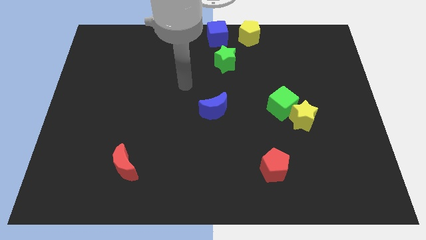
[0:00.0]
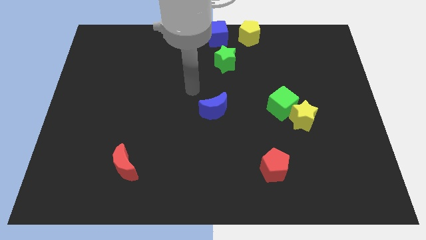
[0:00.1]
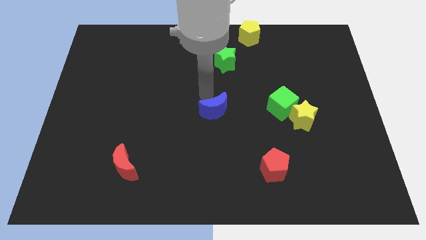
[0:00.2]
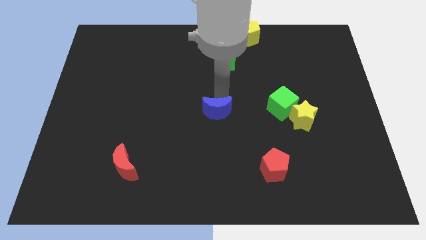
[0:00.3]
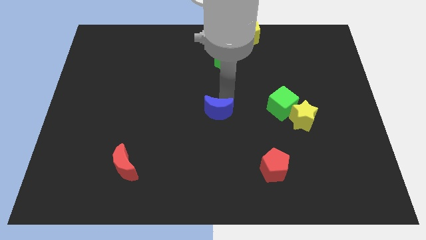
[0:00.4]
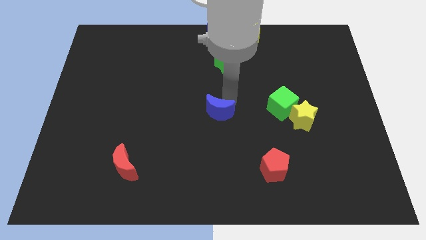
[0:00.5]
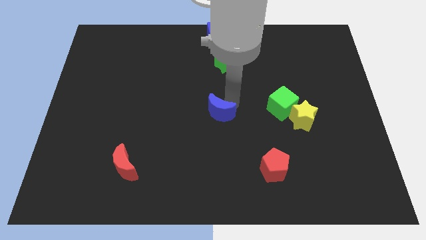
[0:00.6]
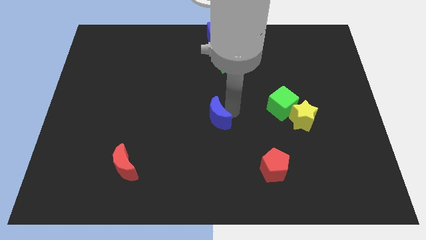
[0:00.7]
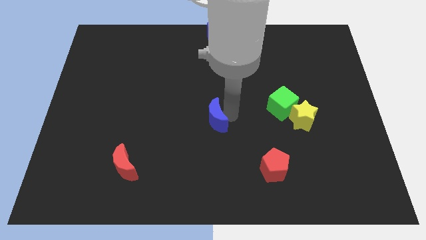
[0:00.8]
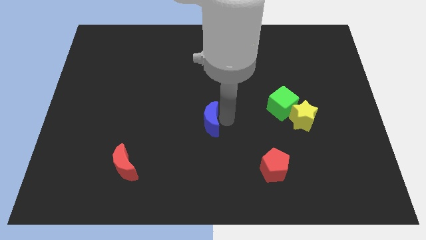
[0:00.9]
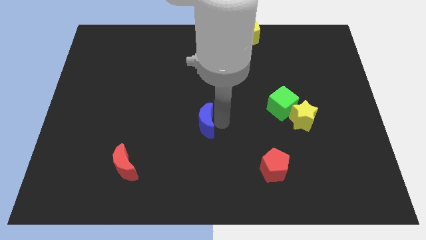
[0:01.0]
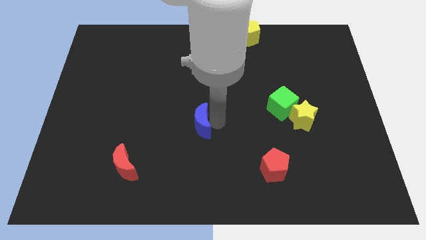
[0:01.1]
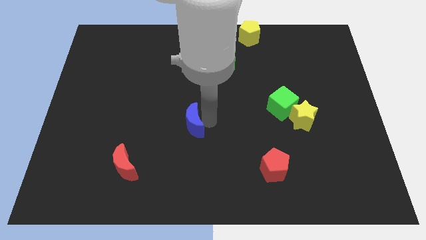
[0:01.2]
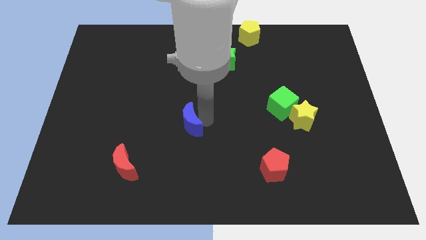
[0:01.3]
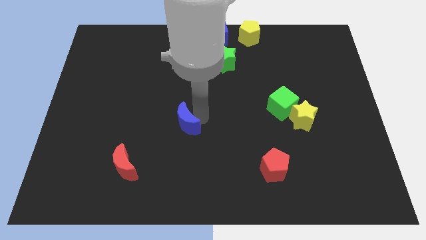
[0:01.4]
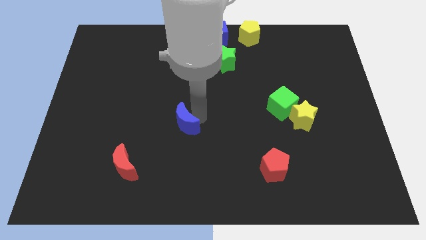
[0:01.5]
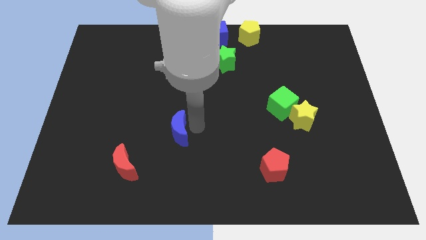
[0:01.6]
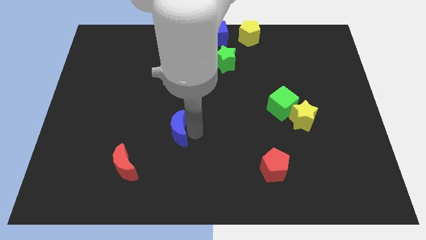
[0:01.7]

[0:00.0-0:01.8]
push the blue moon towards the left side

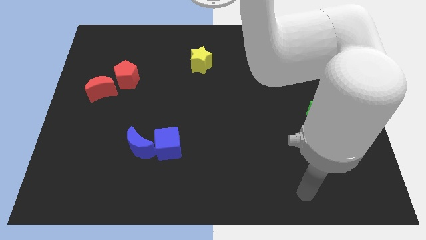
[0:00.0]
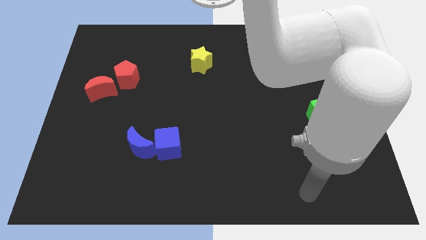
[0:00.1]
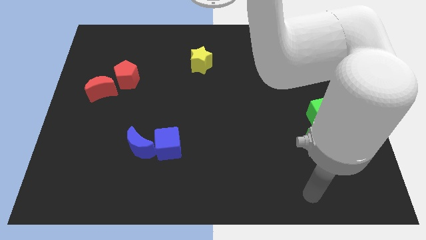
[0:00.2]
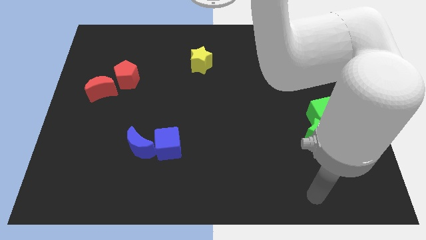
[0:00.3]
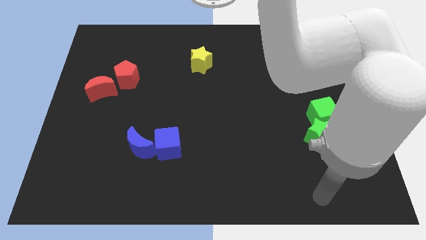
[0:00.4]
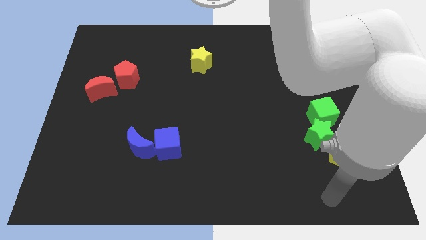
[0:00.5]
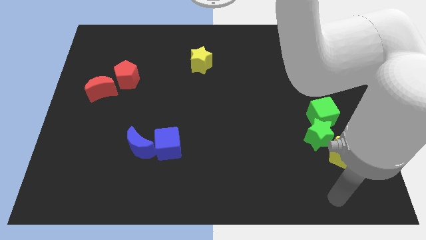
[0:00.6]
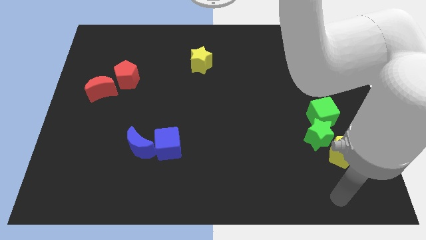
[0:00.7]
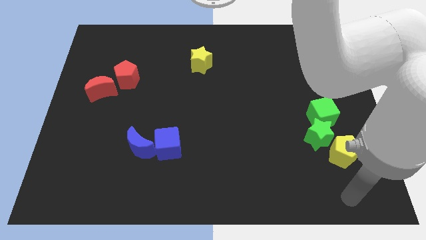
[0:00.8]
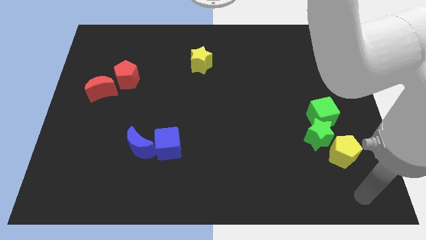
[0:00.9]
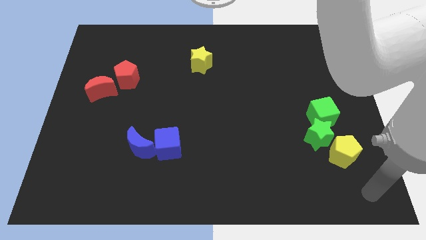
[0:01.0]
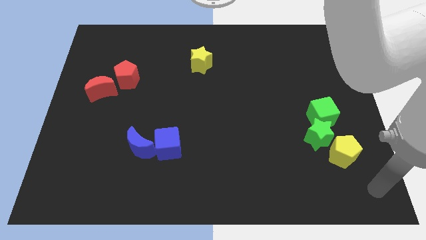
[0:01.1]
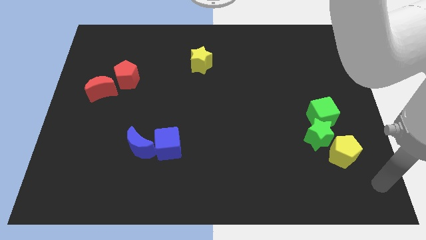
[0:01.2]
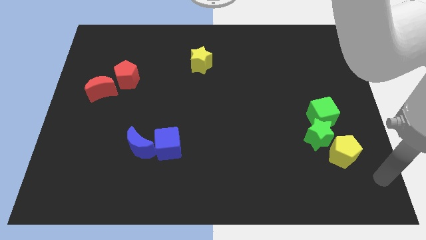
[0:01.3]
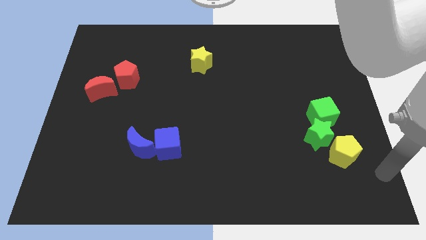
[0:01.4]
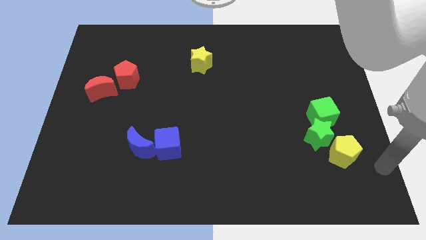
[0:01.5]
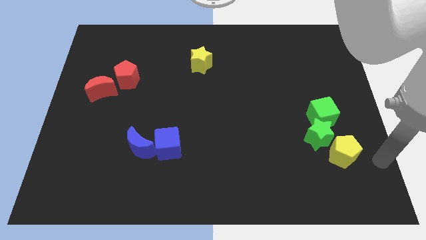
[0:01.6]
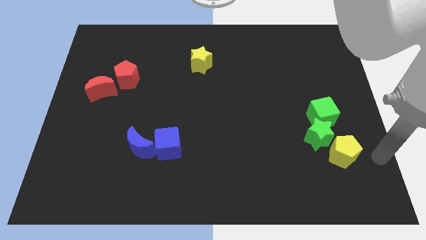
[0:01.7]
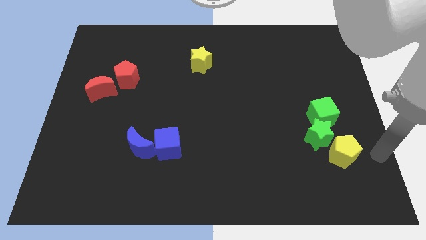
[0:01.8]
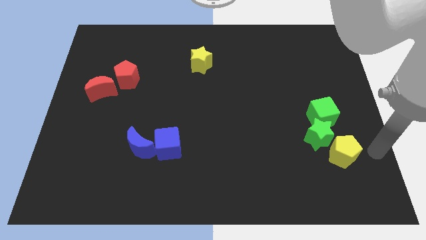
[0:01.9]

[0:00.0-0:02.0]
point your hand at the right side of the yellow pentagon

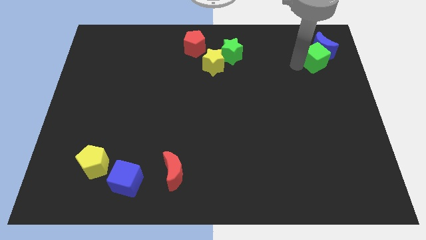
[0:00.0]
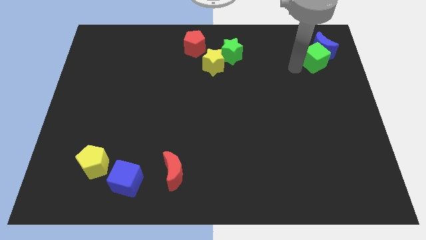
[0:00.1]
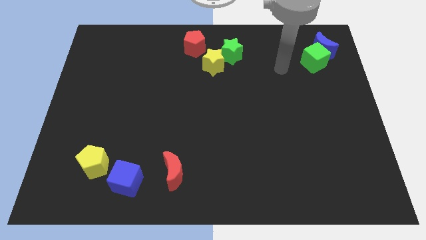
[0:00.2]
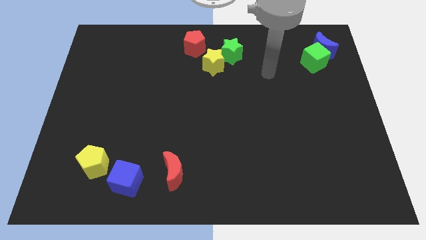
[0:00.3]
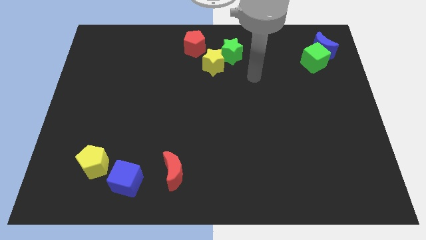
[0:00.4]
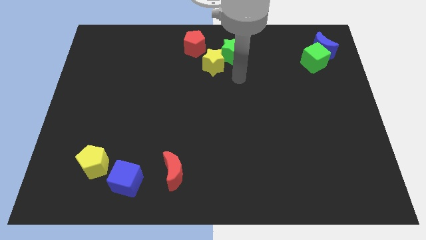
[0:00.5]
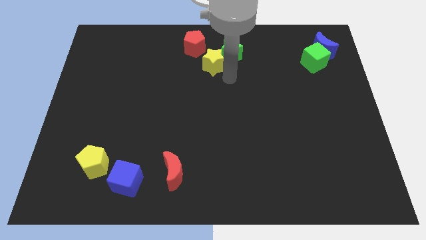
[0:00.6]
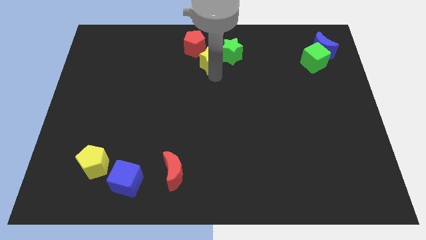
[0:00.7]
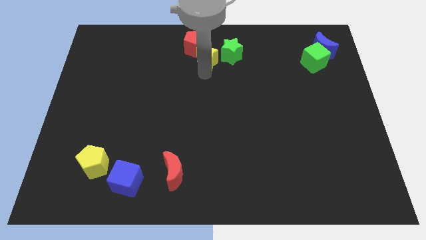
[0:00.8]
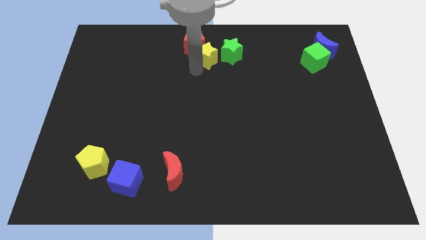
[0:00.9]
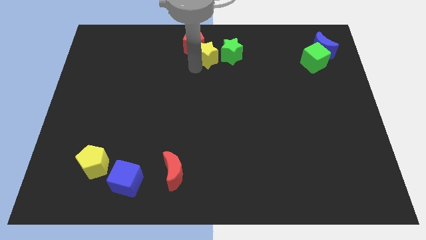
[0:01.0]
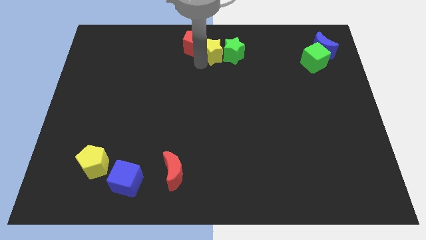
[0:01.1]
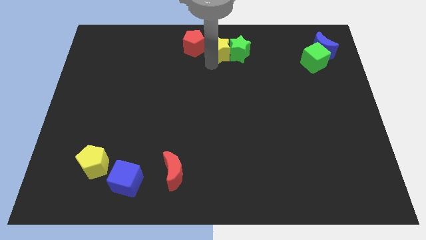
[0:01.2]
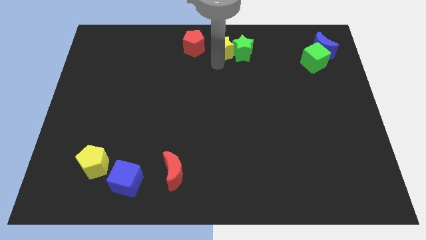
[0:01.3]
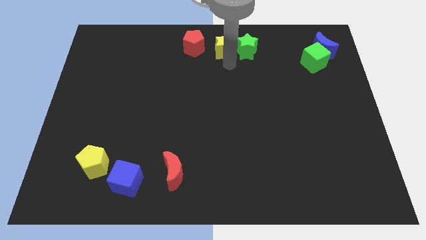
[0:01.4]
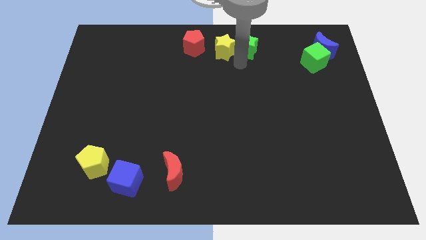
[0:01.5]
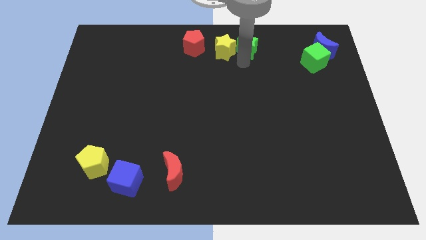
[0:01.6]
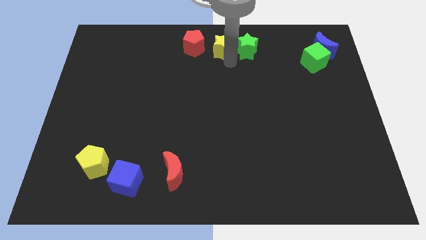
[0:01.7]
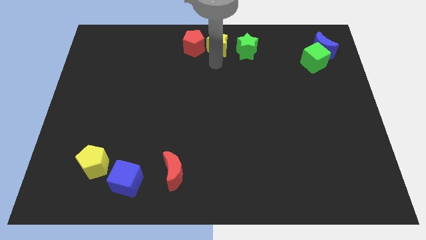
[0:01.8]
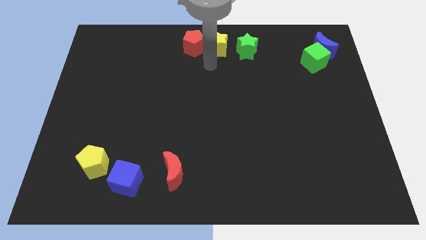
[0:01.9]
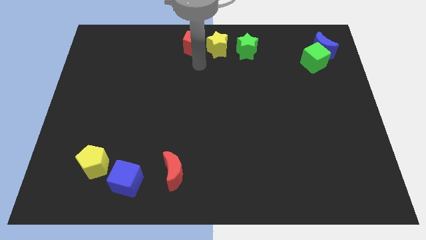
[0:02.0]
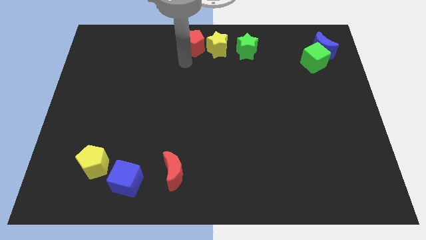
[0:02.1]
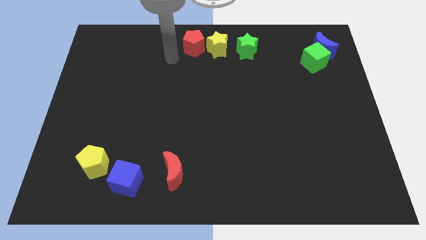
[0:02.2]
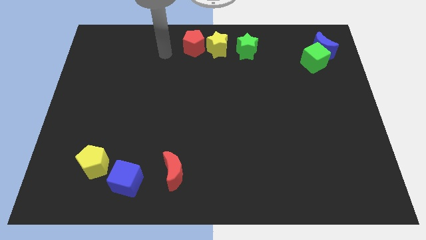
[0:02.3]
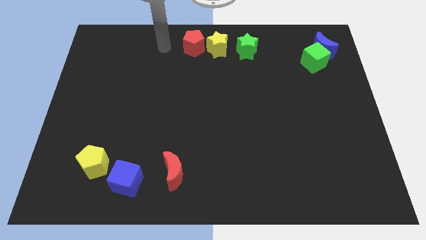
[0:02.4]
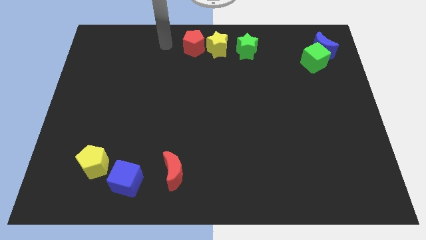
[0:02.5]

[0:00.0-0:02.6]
move the yellow star slightly up

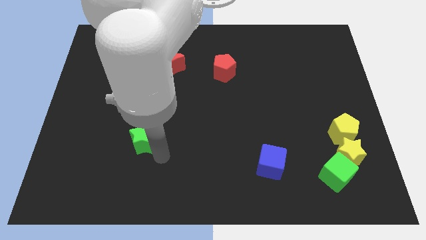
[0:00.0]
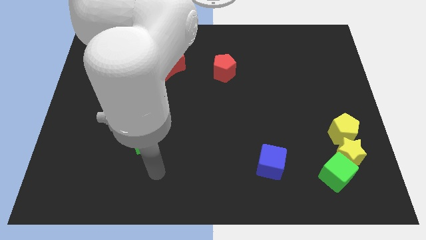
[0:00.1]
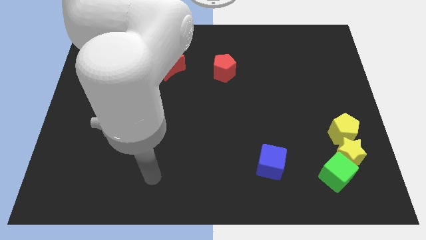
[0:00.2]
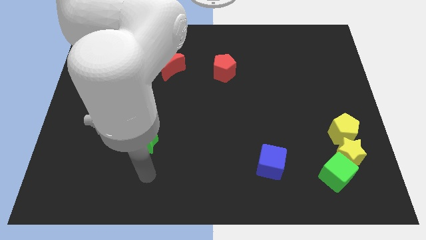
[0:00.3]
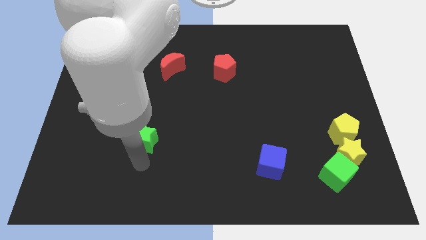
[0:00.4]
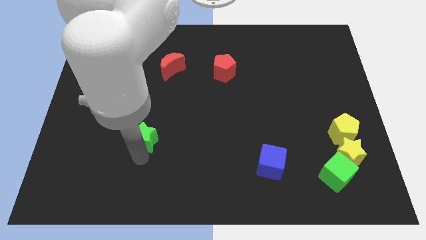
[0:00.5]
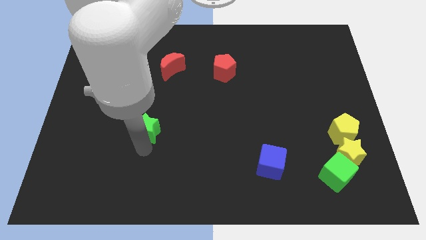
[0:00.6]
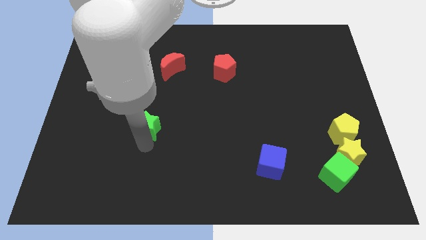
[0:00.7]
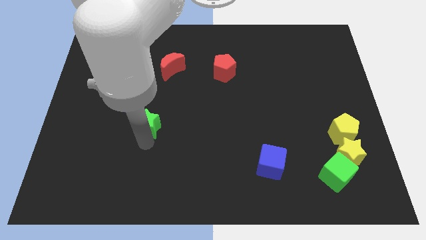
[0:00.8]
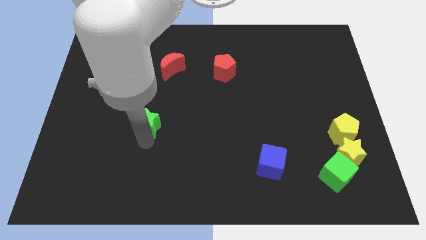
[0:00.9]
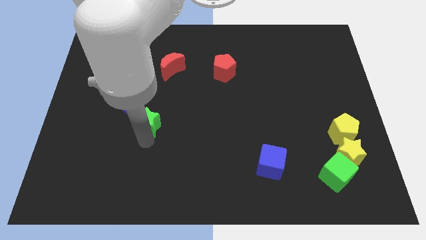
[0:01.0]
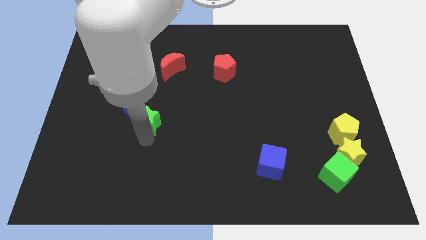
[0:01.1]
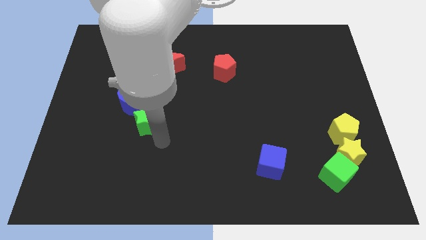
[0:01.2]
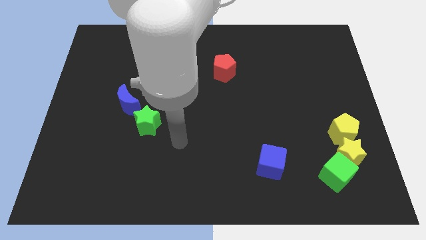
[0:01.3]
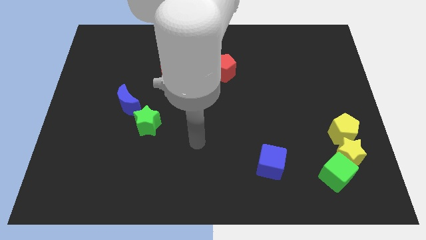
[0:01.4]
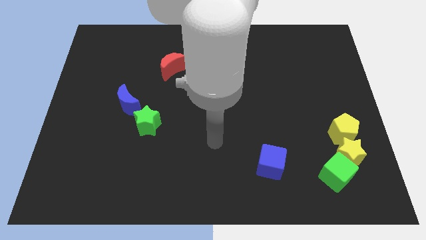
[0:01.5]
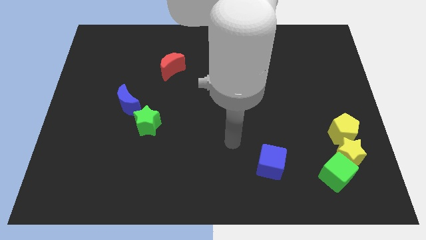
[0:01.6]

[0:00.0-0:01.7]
place the green star close to blue crescent

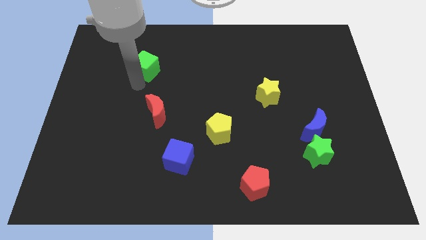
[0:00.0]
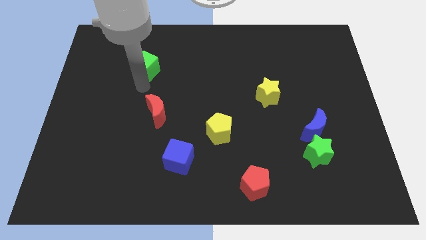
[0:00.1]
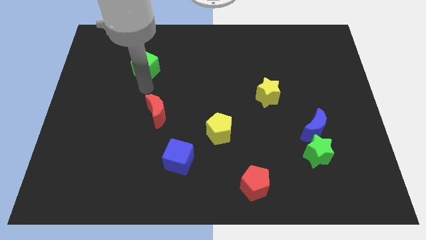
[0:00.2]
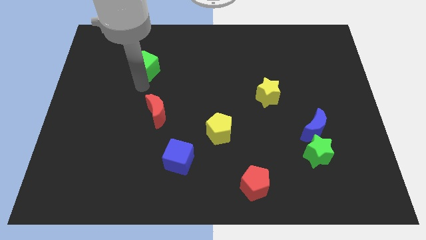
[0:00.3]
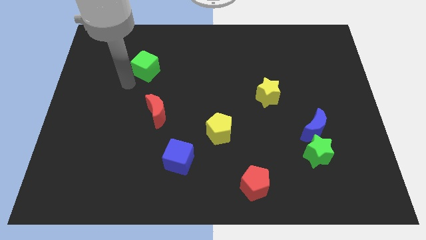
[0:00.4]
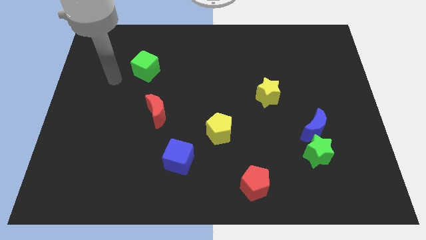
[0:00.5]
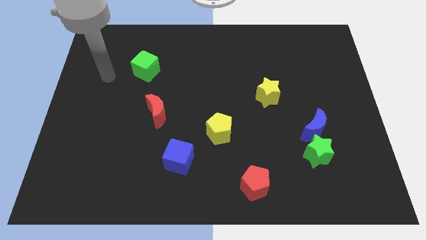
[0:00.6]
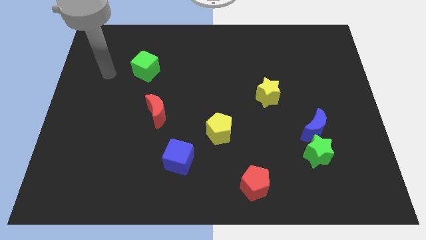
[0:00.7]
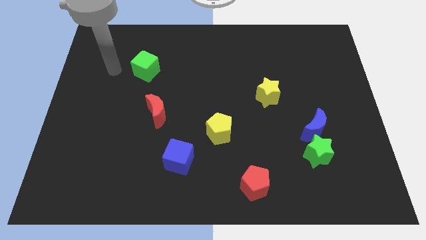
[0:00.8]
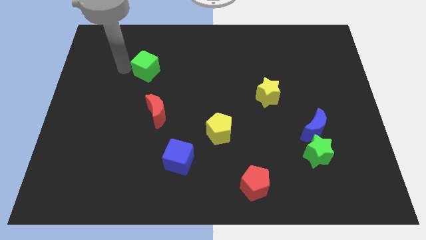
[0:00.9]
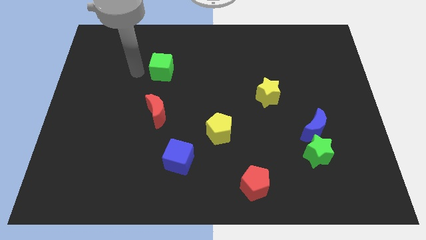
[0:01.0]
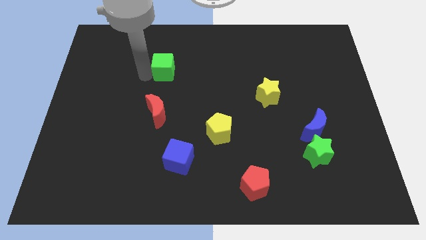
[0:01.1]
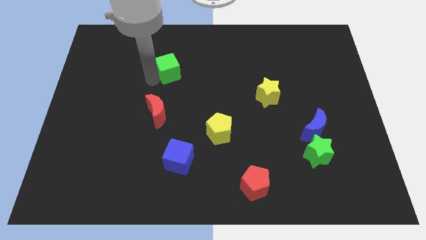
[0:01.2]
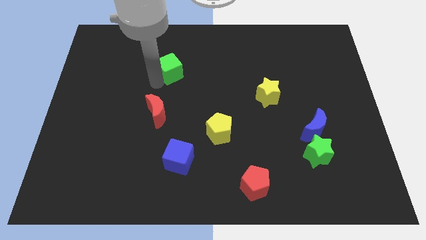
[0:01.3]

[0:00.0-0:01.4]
place the green cube above the yellow pentagon
